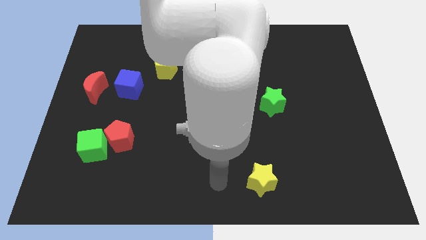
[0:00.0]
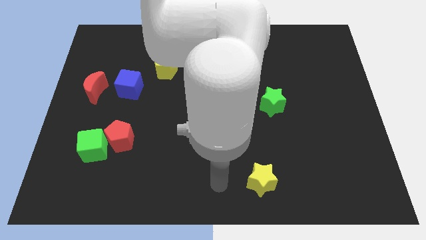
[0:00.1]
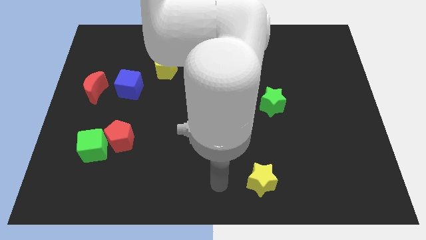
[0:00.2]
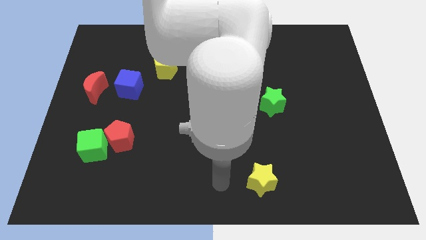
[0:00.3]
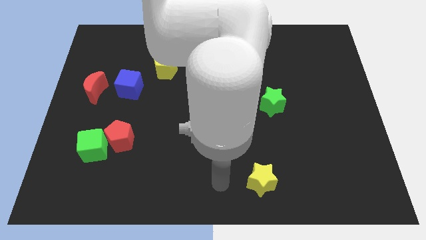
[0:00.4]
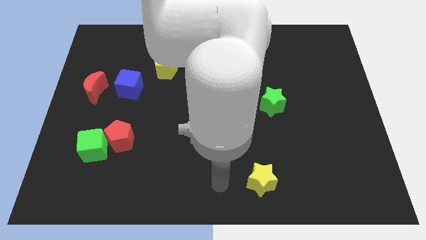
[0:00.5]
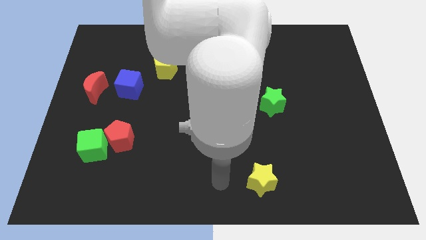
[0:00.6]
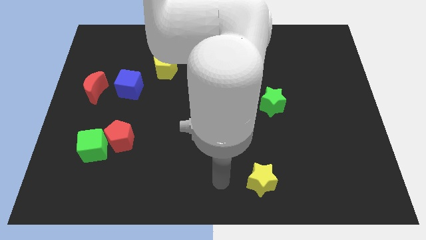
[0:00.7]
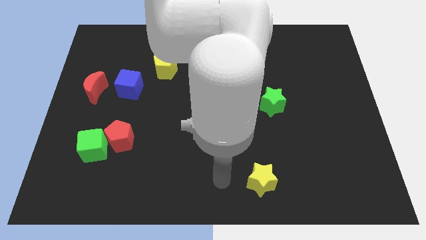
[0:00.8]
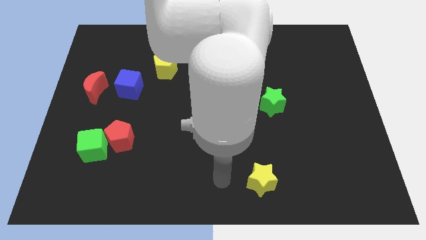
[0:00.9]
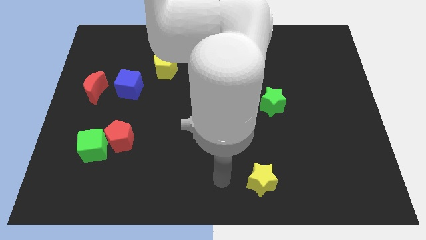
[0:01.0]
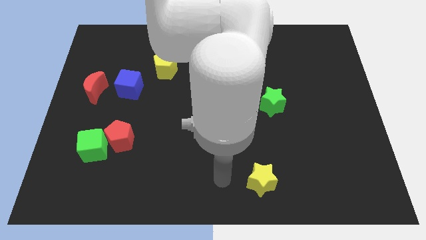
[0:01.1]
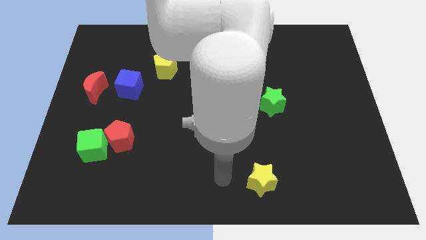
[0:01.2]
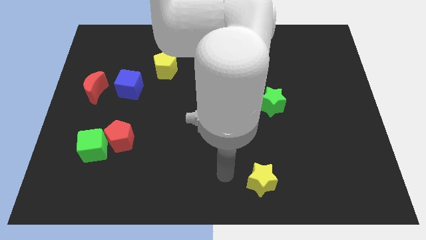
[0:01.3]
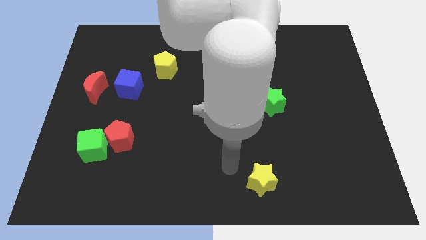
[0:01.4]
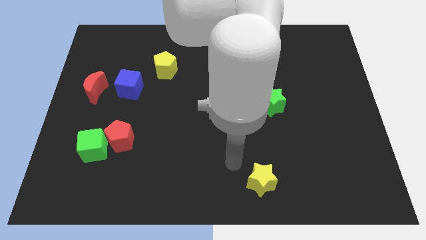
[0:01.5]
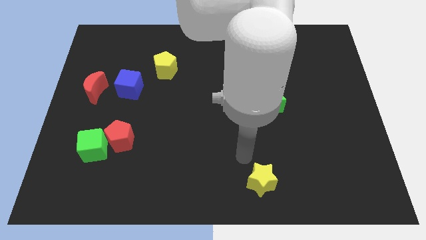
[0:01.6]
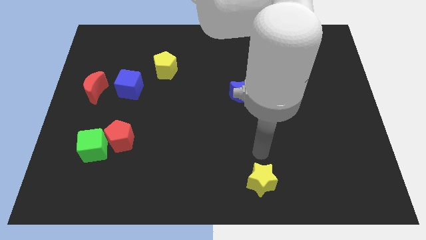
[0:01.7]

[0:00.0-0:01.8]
move your arm to the top of the yellow star

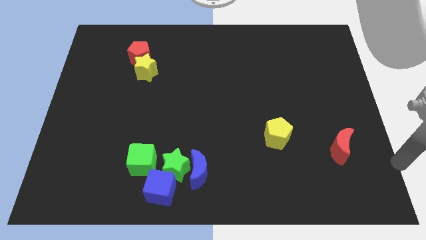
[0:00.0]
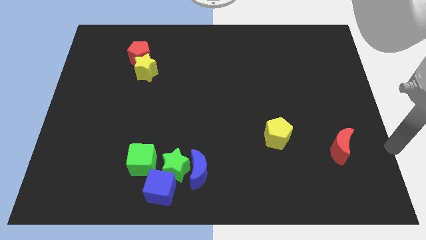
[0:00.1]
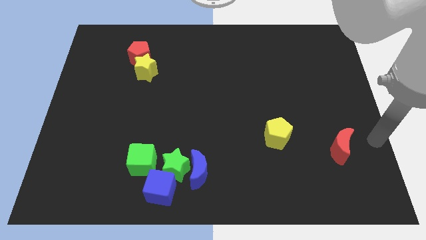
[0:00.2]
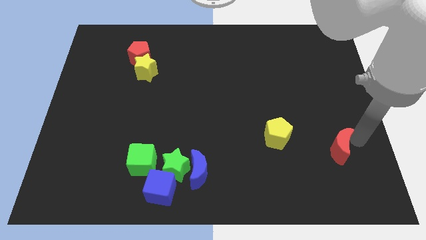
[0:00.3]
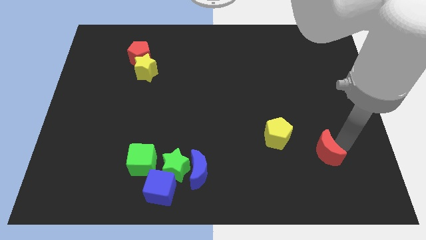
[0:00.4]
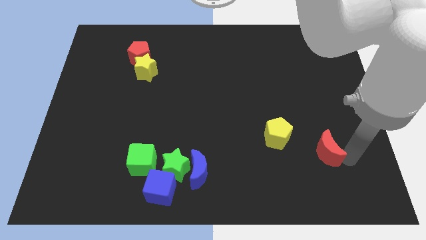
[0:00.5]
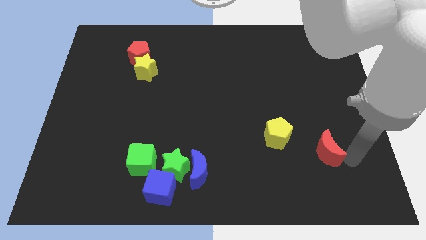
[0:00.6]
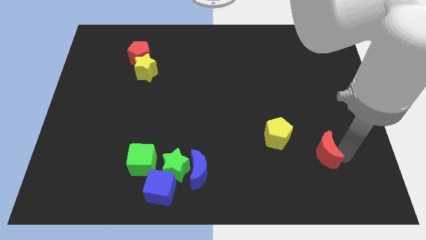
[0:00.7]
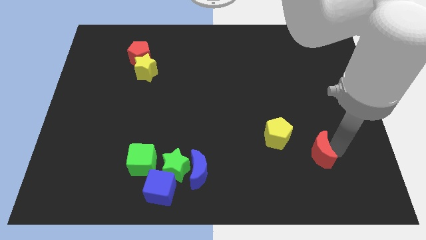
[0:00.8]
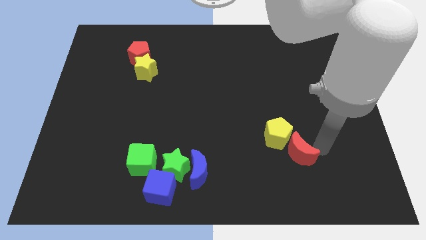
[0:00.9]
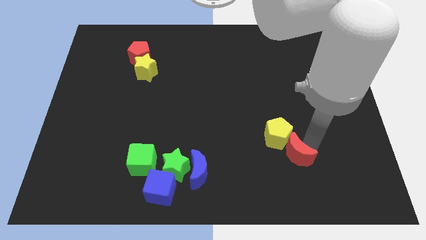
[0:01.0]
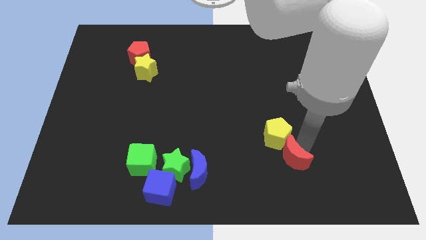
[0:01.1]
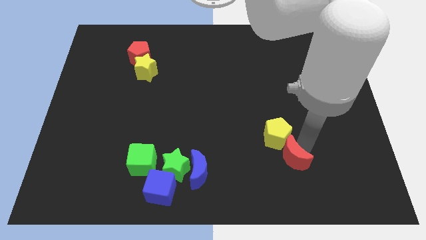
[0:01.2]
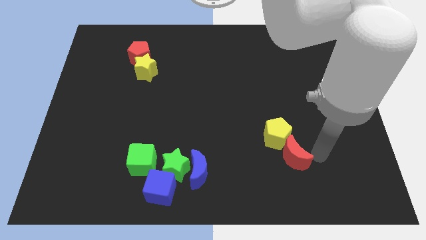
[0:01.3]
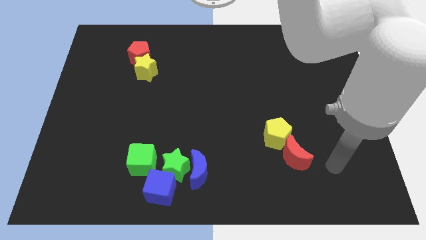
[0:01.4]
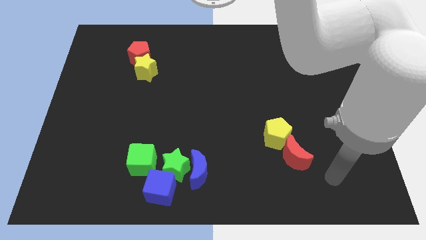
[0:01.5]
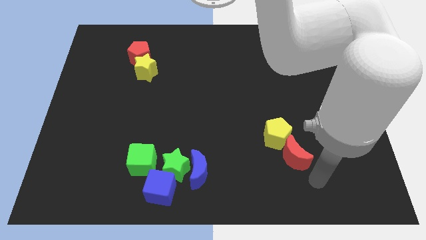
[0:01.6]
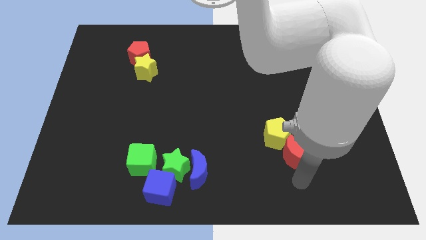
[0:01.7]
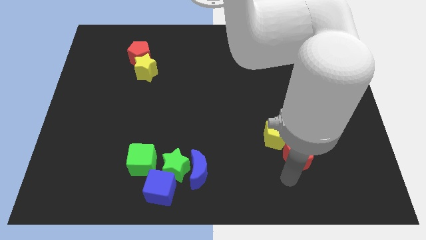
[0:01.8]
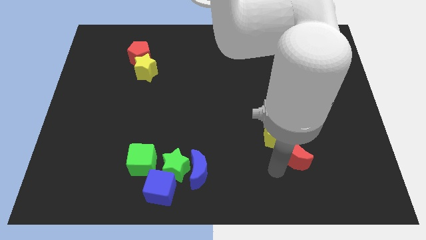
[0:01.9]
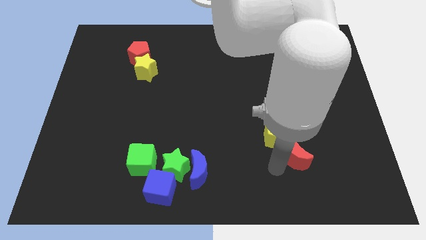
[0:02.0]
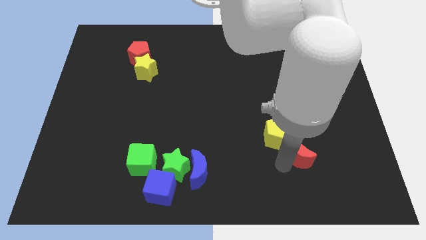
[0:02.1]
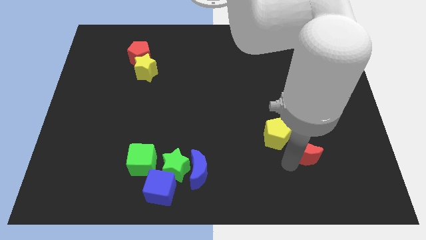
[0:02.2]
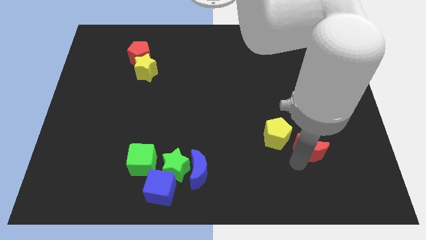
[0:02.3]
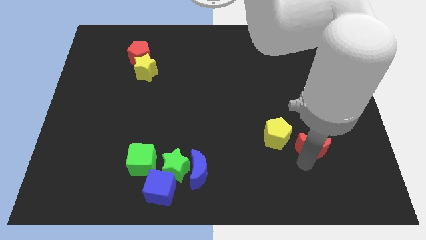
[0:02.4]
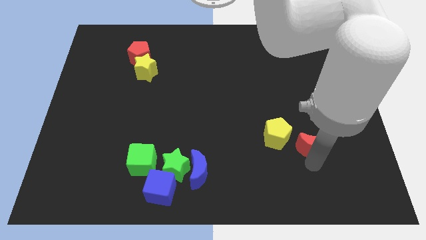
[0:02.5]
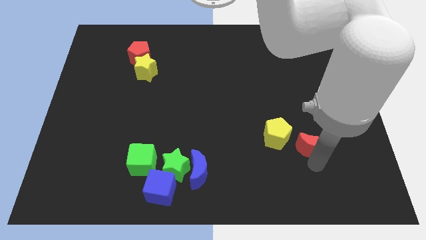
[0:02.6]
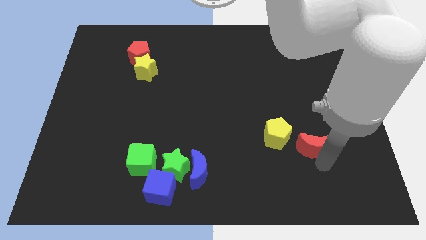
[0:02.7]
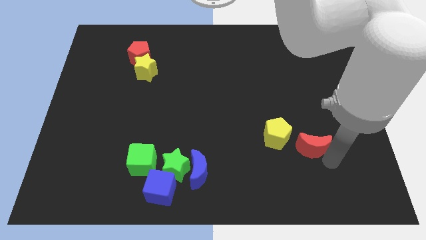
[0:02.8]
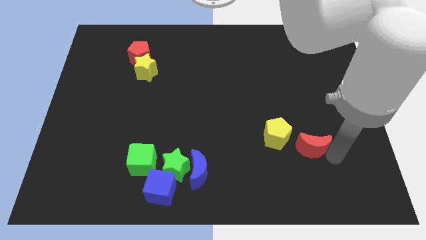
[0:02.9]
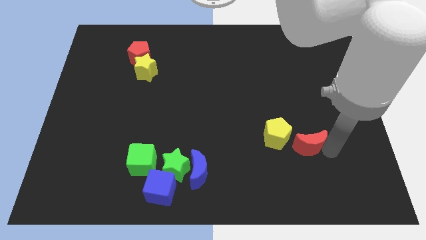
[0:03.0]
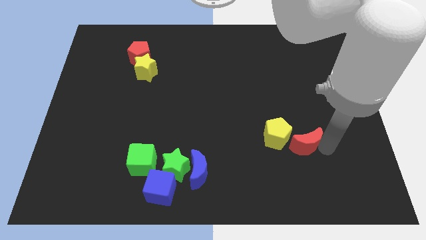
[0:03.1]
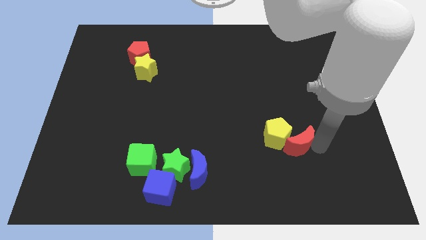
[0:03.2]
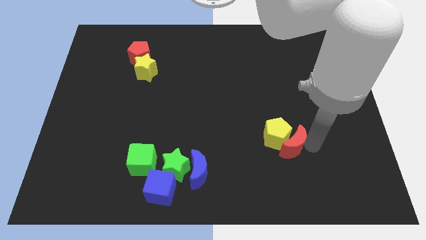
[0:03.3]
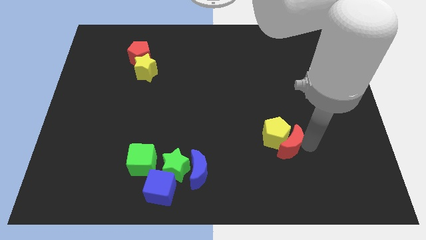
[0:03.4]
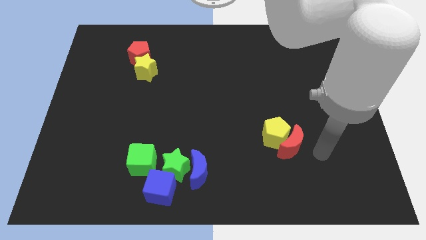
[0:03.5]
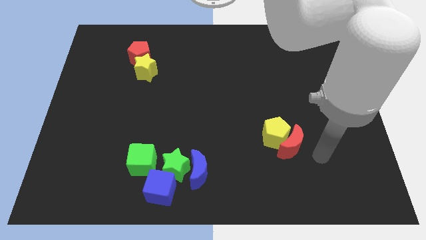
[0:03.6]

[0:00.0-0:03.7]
move the red crescent towards the yellow pentagon

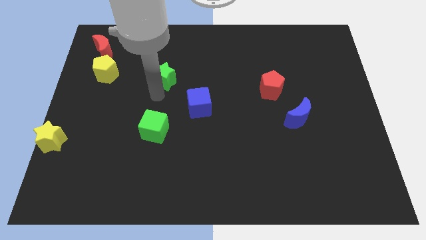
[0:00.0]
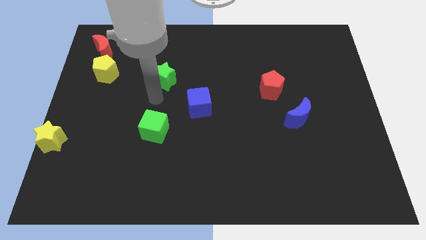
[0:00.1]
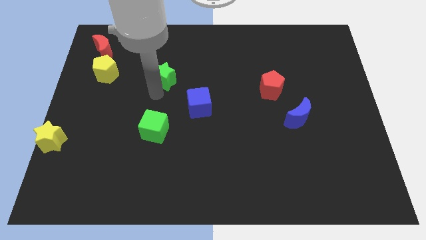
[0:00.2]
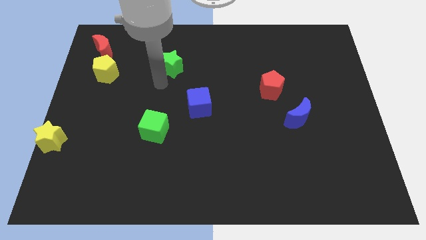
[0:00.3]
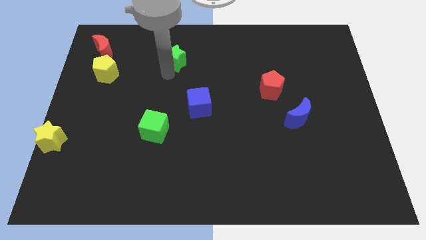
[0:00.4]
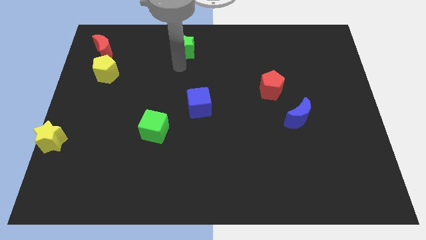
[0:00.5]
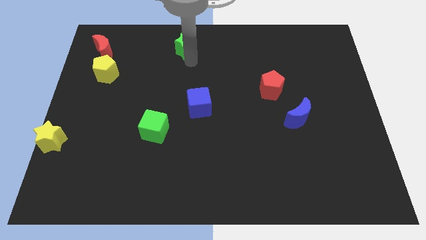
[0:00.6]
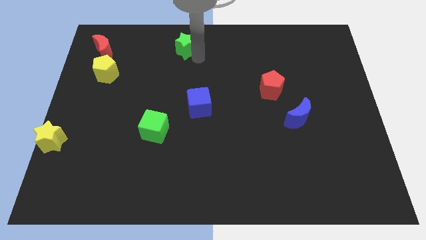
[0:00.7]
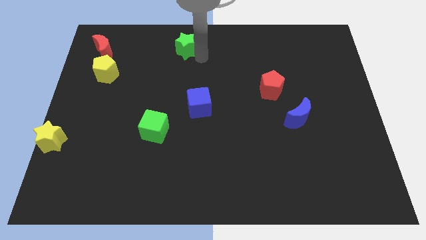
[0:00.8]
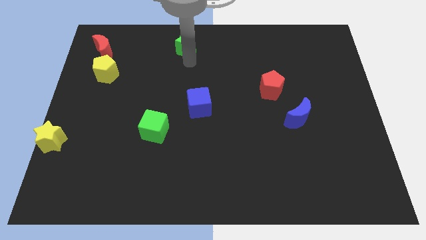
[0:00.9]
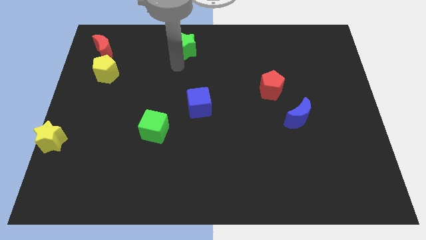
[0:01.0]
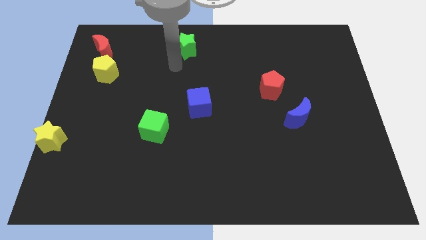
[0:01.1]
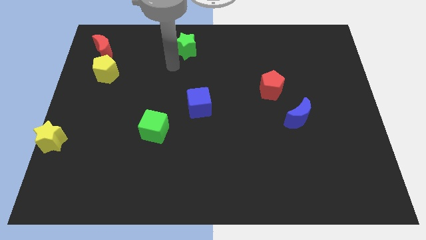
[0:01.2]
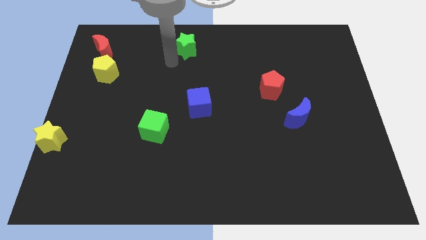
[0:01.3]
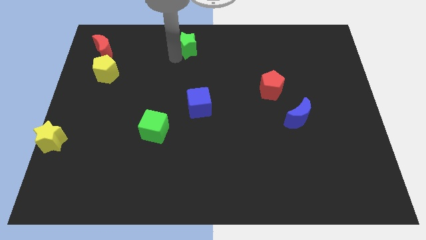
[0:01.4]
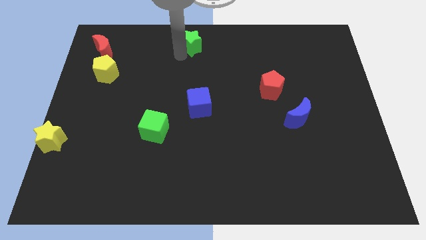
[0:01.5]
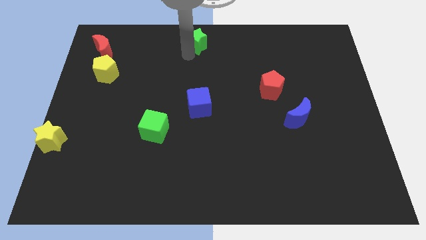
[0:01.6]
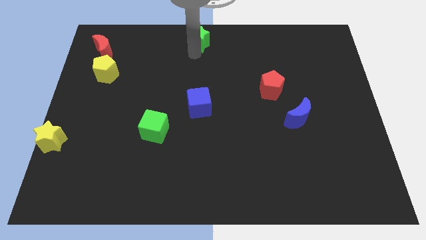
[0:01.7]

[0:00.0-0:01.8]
move the green star to the top of the blue cube

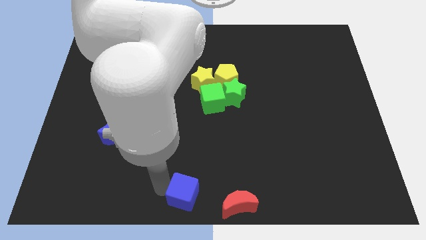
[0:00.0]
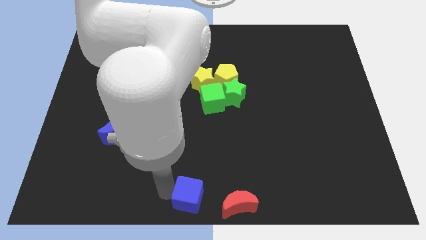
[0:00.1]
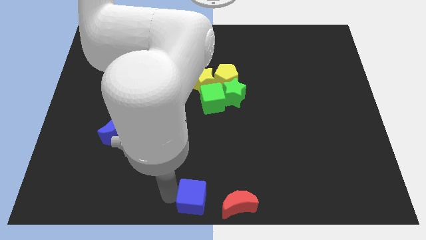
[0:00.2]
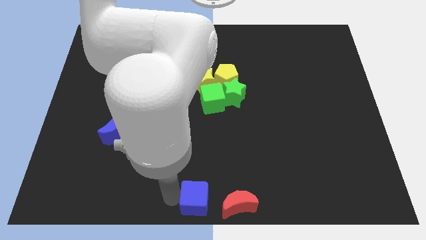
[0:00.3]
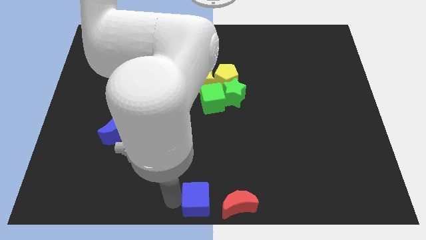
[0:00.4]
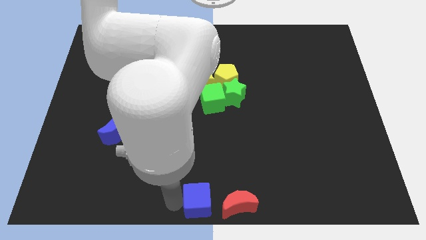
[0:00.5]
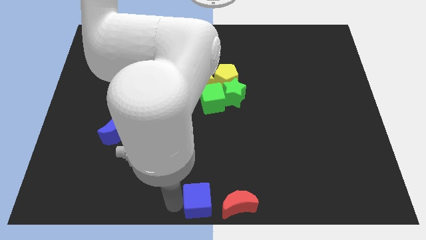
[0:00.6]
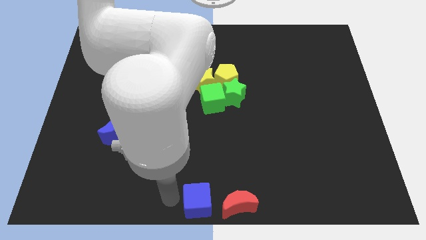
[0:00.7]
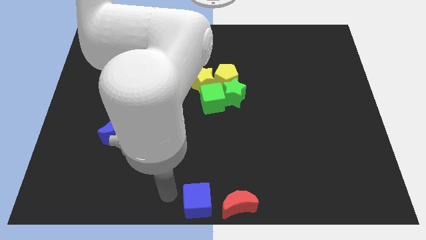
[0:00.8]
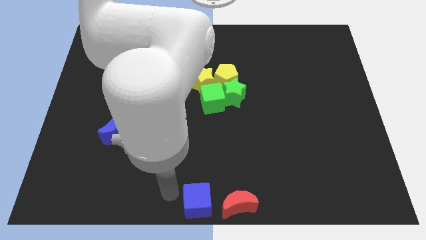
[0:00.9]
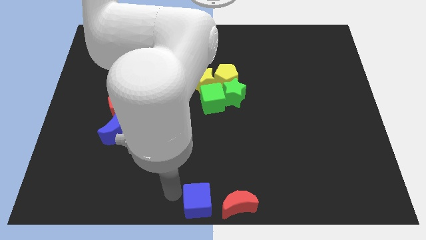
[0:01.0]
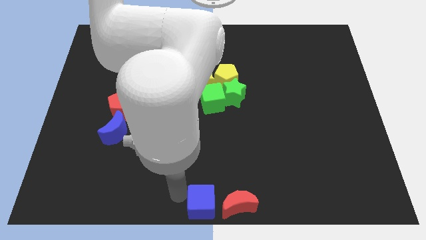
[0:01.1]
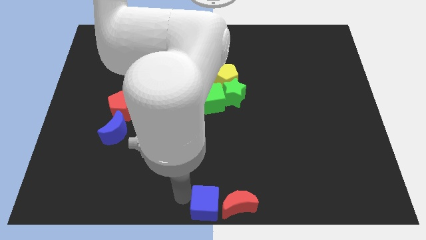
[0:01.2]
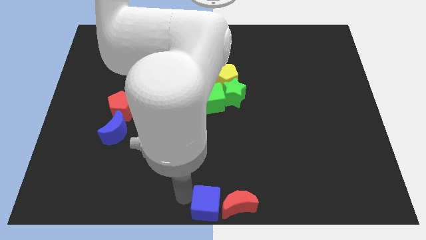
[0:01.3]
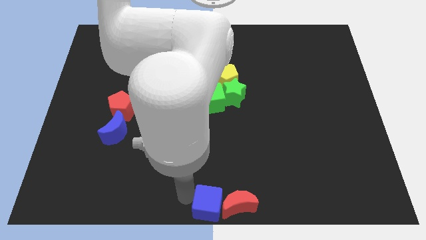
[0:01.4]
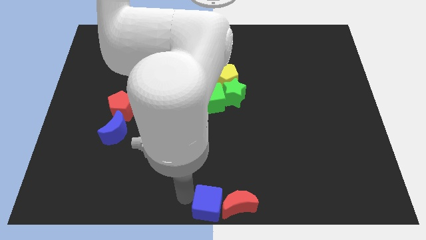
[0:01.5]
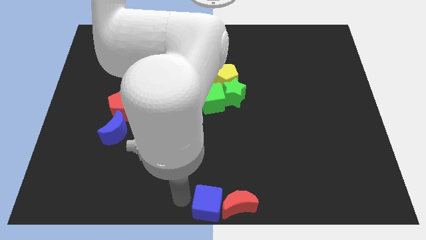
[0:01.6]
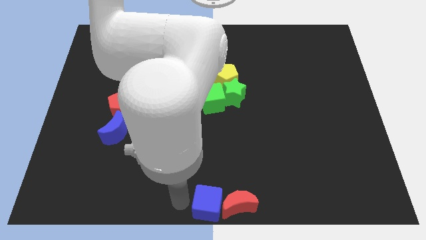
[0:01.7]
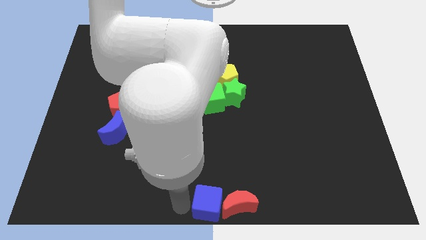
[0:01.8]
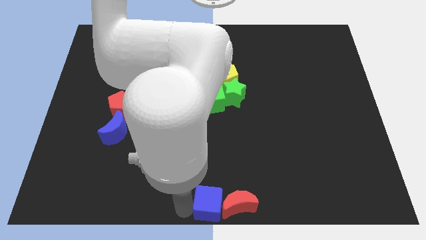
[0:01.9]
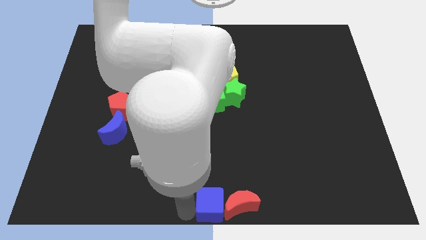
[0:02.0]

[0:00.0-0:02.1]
place the blue cube at the bottom center
